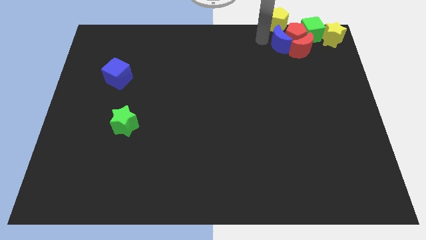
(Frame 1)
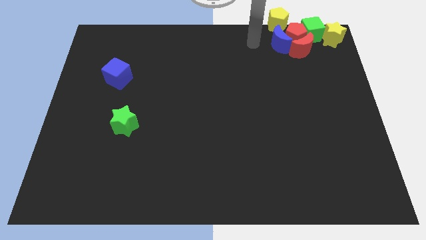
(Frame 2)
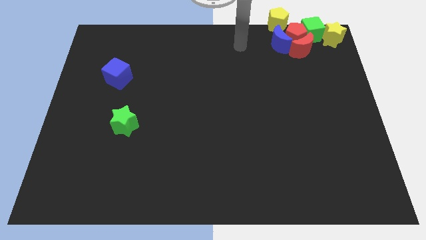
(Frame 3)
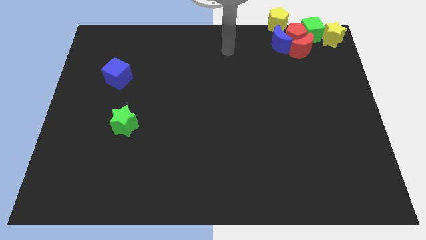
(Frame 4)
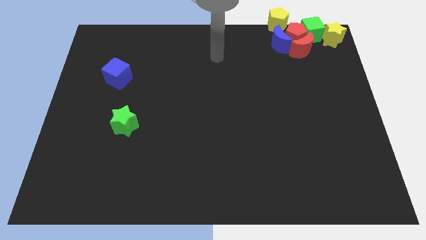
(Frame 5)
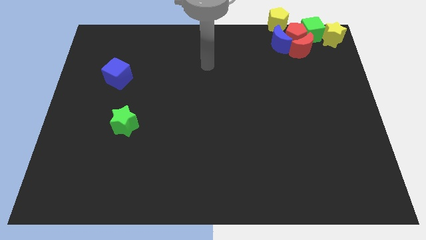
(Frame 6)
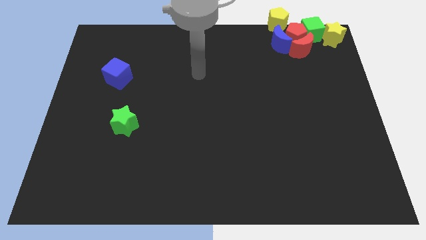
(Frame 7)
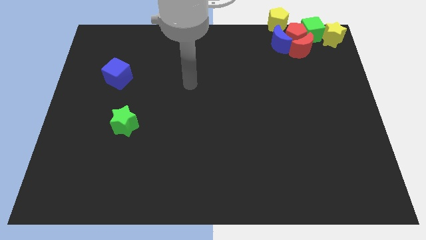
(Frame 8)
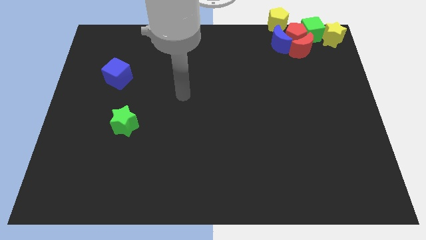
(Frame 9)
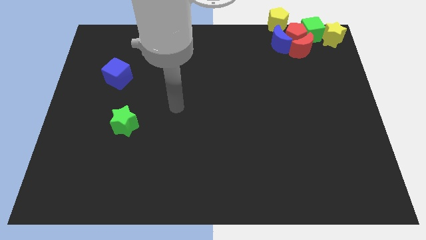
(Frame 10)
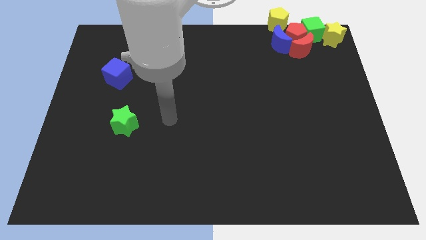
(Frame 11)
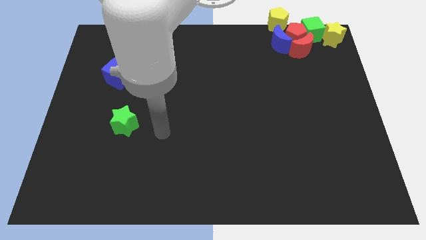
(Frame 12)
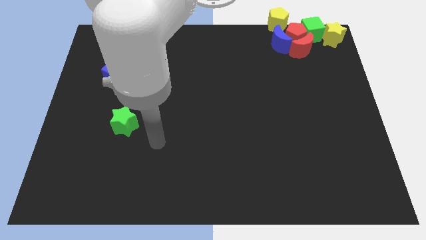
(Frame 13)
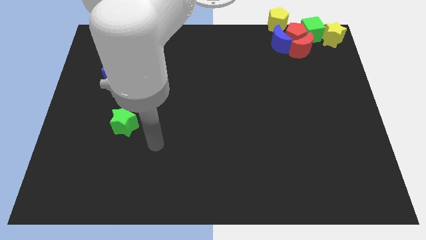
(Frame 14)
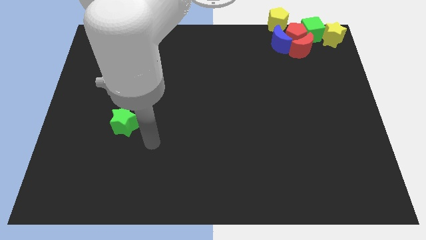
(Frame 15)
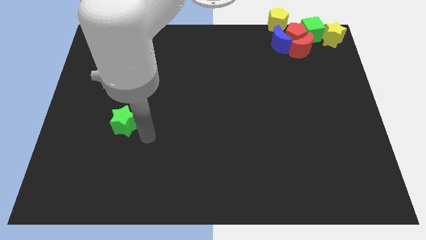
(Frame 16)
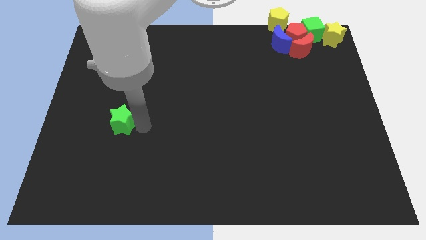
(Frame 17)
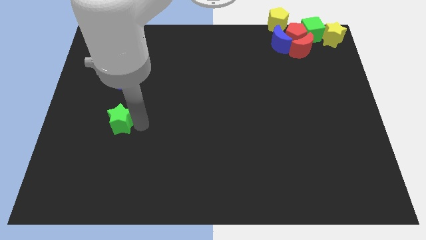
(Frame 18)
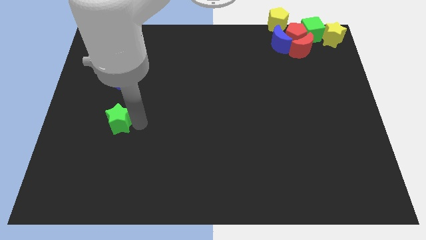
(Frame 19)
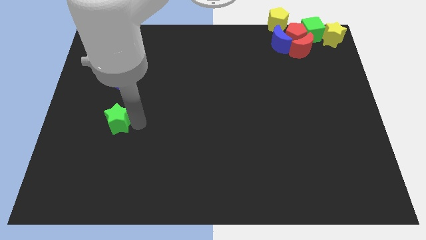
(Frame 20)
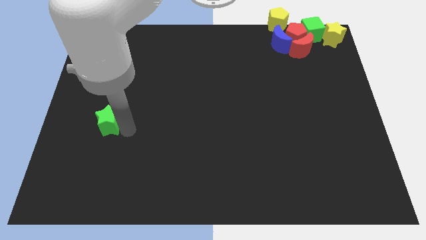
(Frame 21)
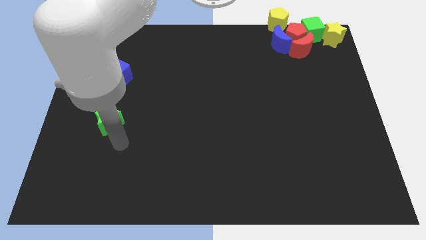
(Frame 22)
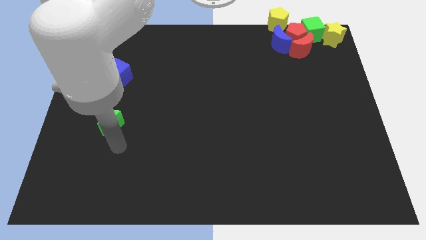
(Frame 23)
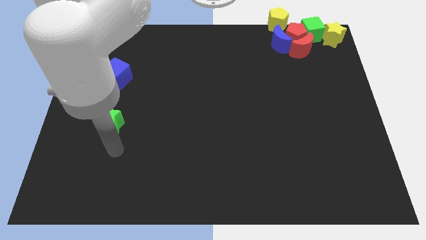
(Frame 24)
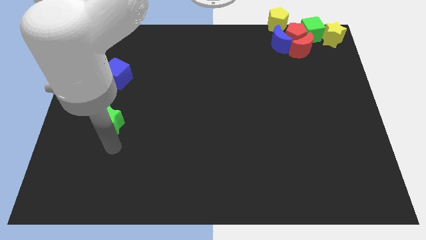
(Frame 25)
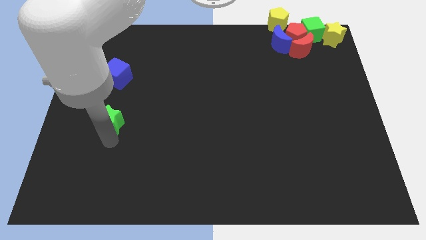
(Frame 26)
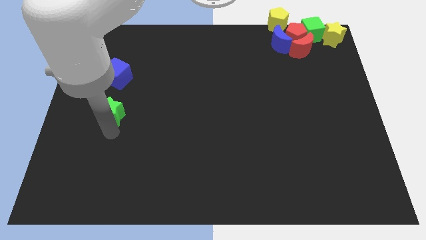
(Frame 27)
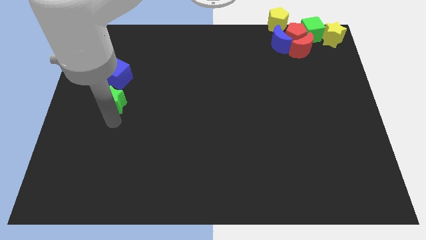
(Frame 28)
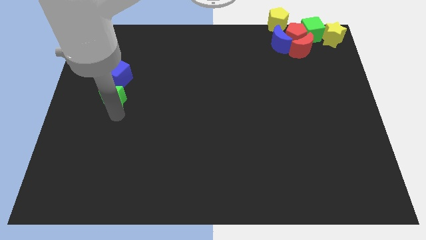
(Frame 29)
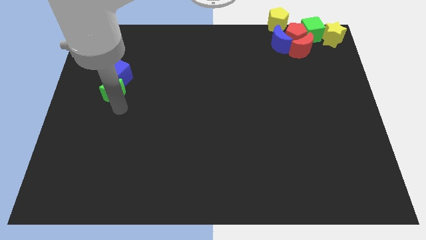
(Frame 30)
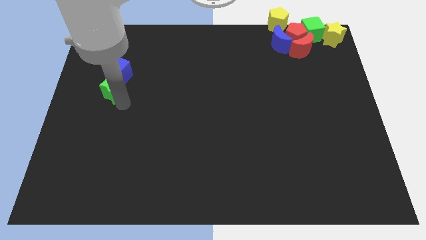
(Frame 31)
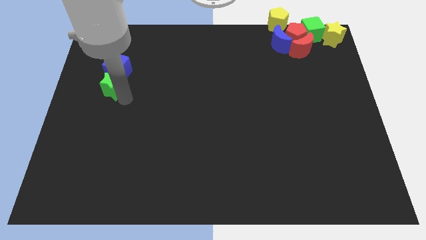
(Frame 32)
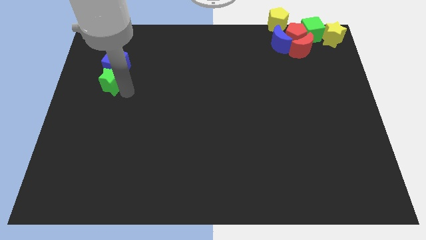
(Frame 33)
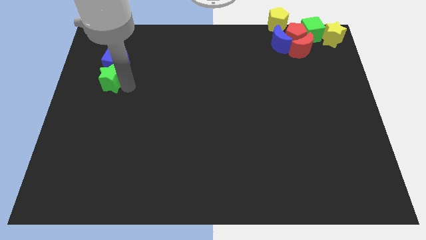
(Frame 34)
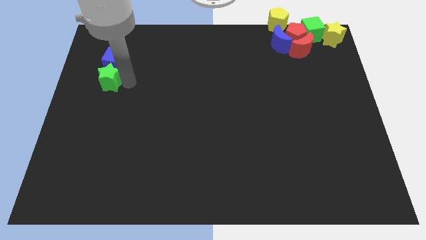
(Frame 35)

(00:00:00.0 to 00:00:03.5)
move the green star into the blue cube

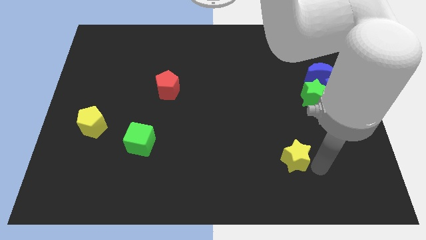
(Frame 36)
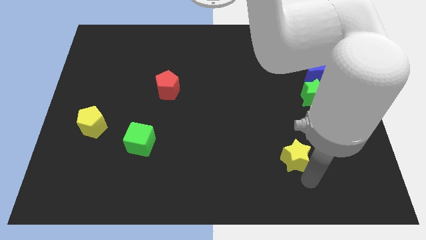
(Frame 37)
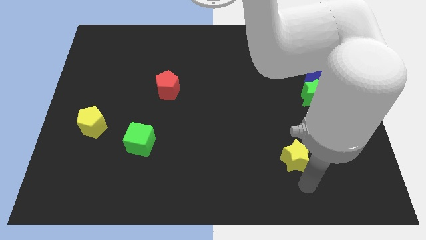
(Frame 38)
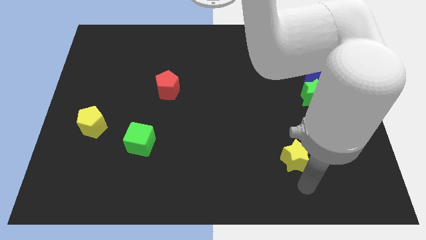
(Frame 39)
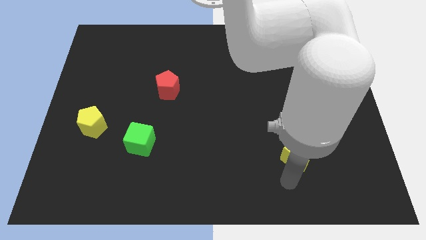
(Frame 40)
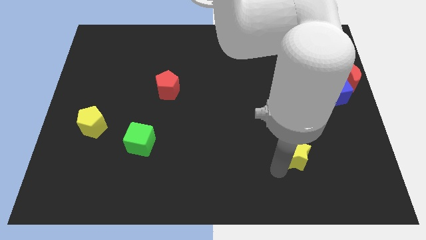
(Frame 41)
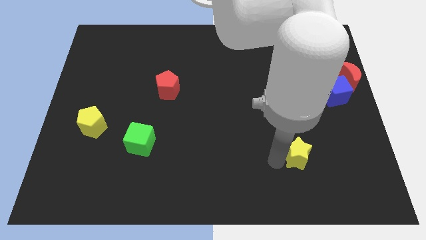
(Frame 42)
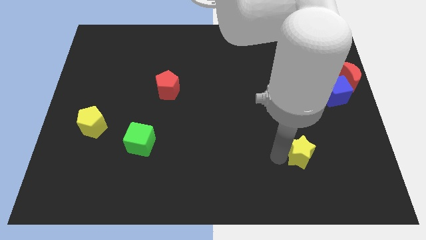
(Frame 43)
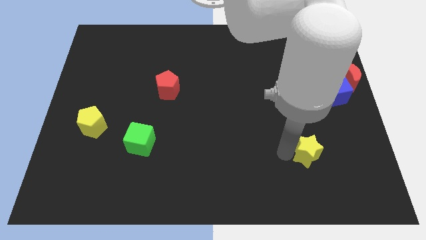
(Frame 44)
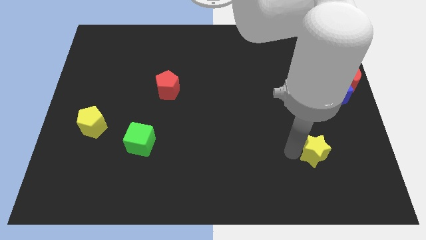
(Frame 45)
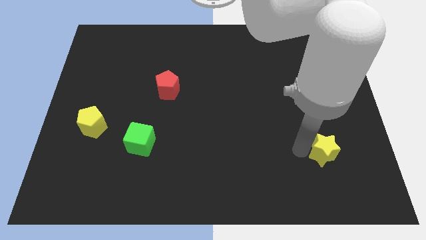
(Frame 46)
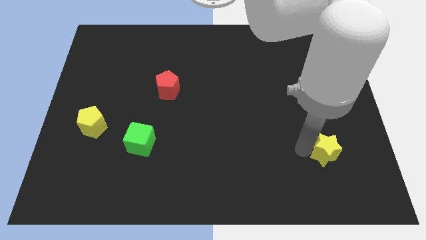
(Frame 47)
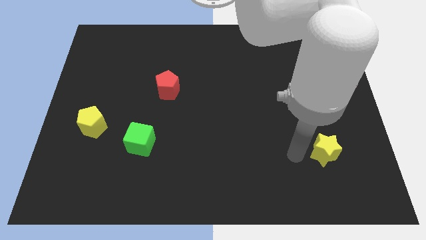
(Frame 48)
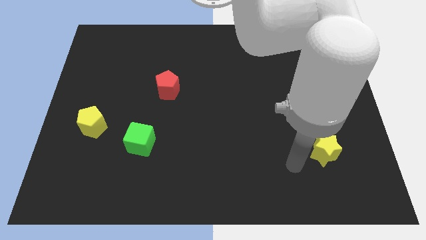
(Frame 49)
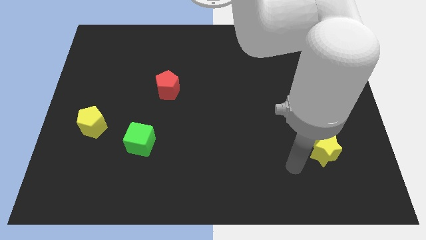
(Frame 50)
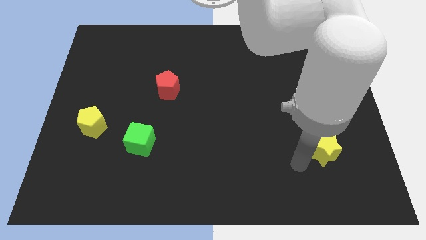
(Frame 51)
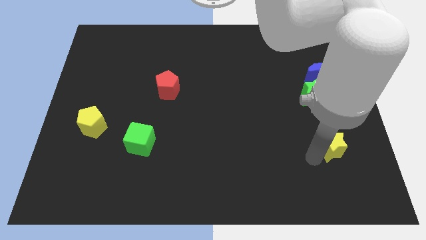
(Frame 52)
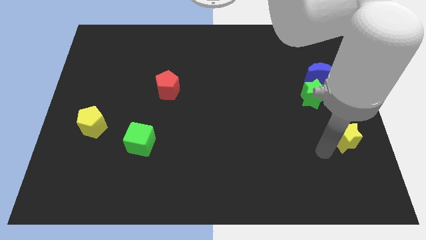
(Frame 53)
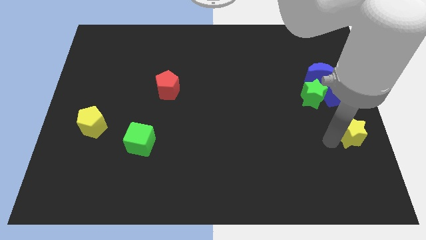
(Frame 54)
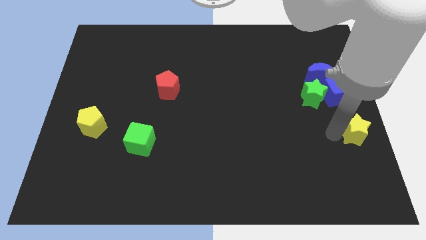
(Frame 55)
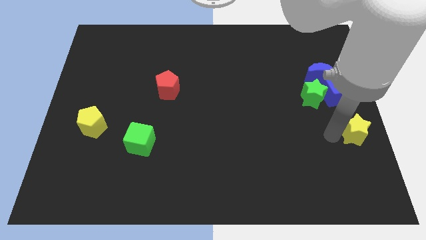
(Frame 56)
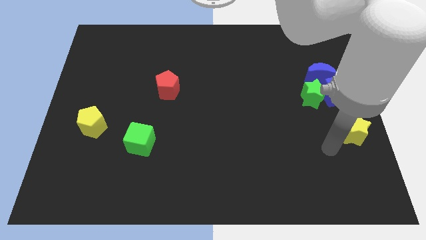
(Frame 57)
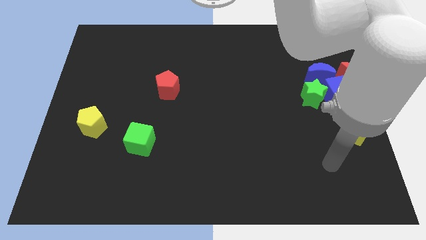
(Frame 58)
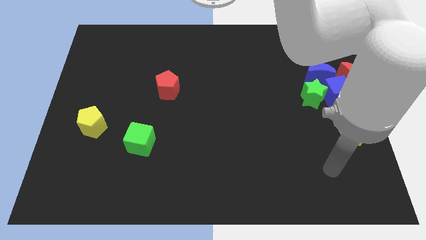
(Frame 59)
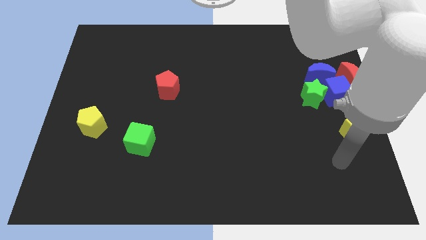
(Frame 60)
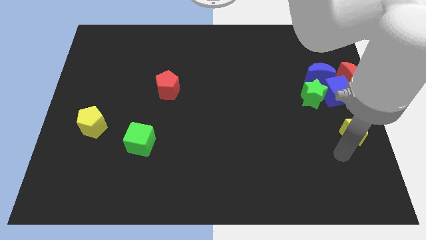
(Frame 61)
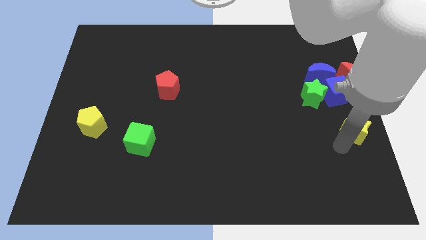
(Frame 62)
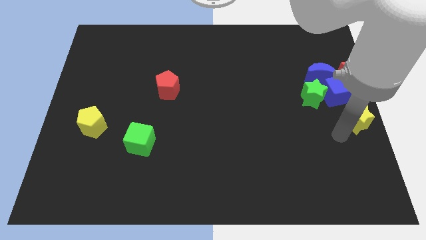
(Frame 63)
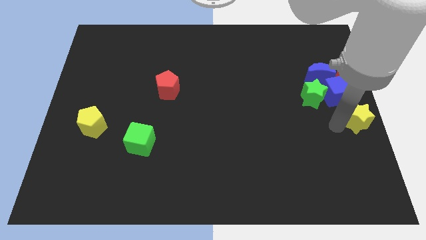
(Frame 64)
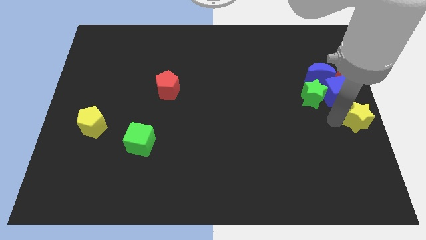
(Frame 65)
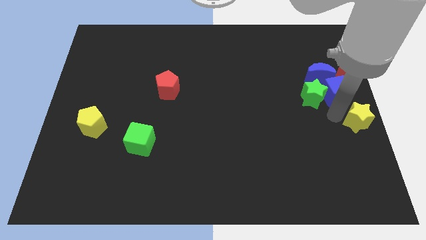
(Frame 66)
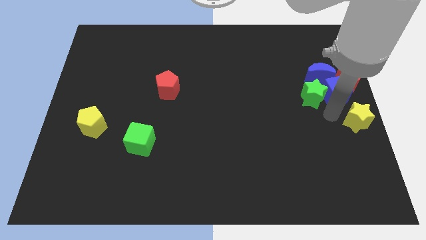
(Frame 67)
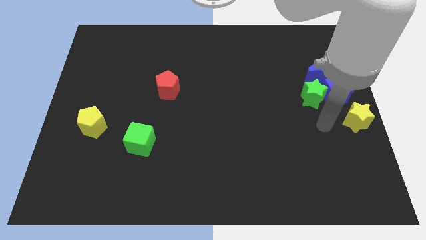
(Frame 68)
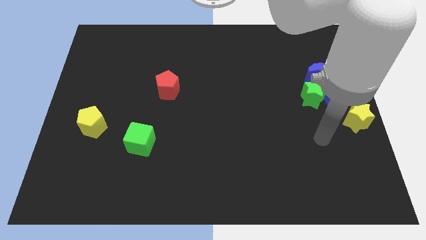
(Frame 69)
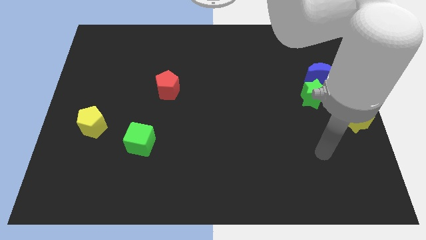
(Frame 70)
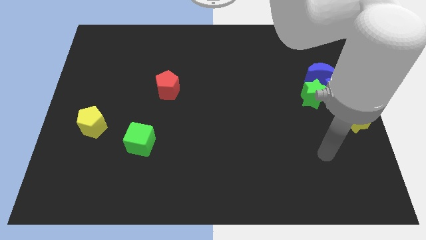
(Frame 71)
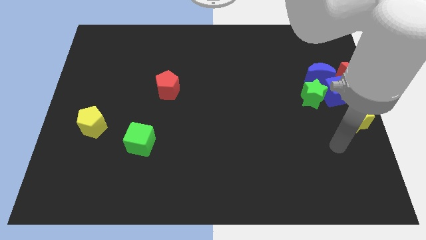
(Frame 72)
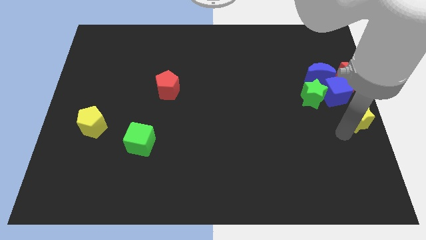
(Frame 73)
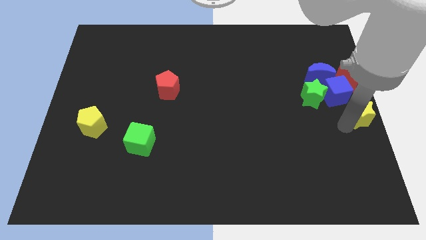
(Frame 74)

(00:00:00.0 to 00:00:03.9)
move the yellow star center right

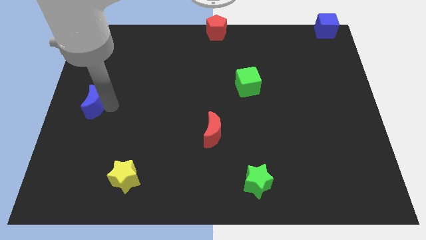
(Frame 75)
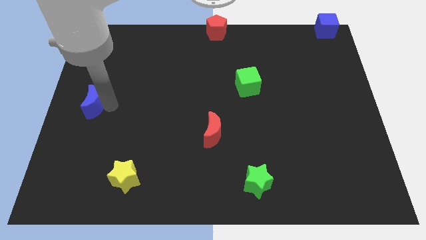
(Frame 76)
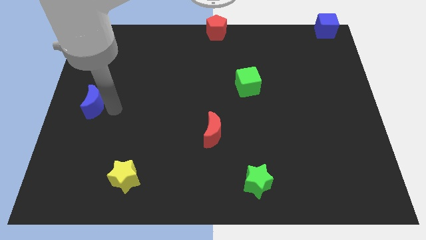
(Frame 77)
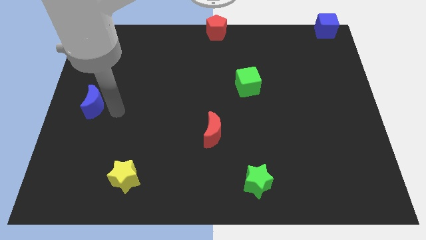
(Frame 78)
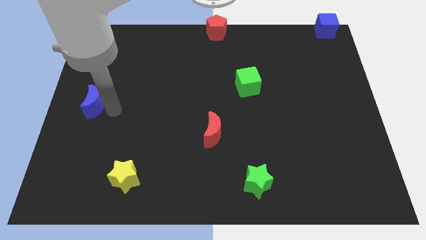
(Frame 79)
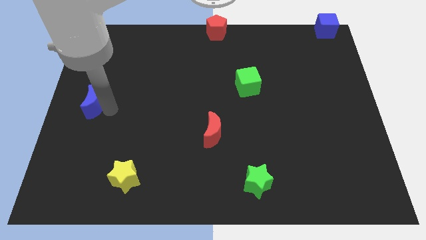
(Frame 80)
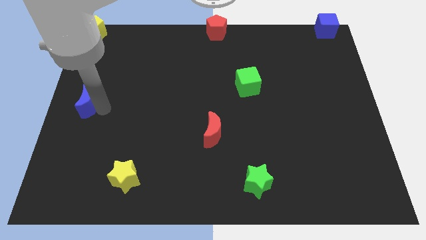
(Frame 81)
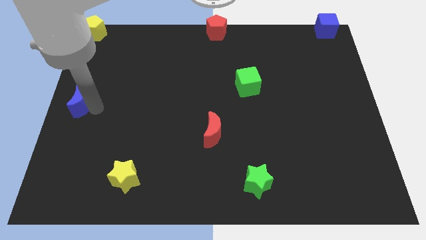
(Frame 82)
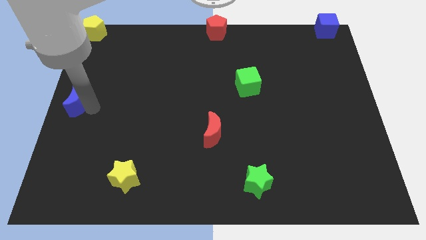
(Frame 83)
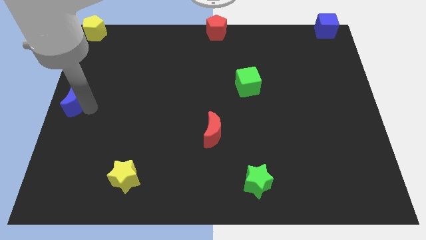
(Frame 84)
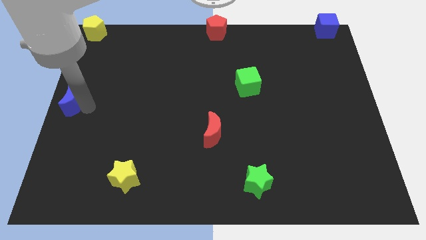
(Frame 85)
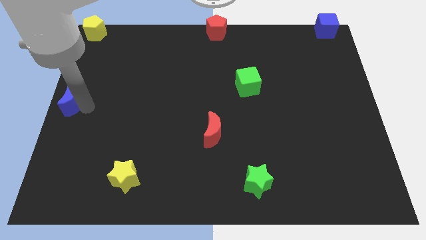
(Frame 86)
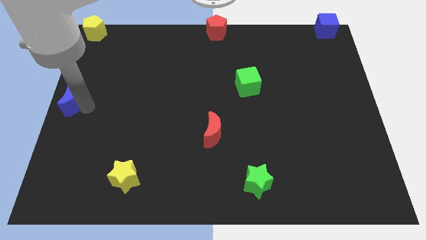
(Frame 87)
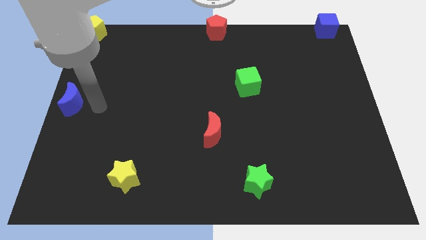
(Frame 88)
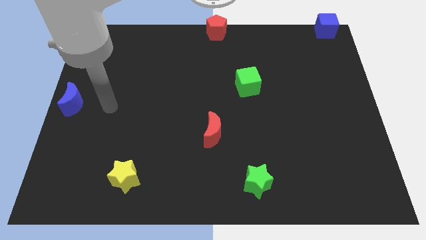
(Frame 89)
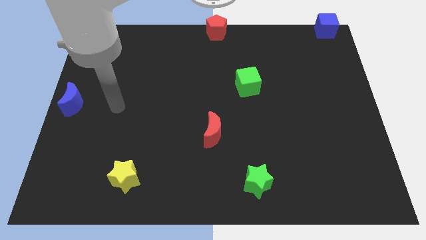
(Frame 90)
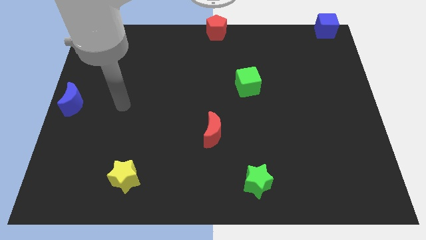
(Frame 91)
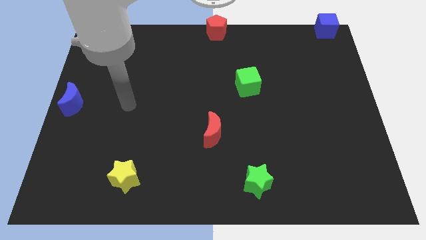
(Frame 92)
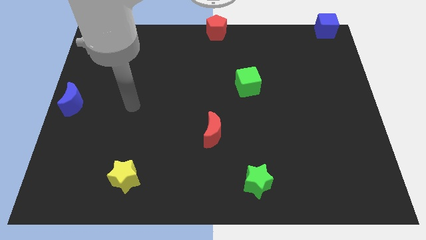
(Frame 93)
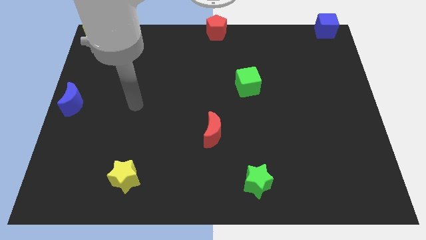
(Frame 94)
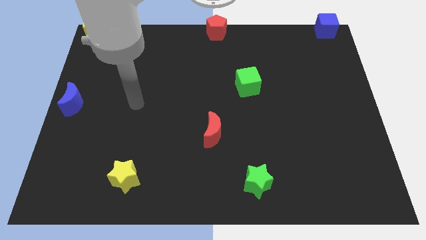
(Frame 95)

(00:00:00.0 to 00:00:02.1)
slide blue moon to the center left
